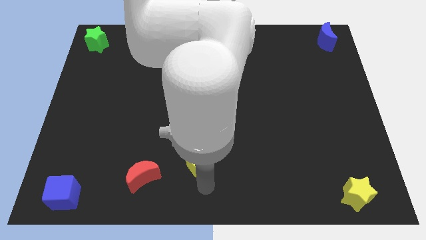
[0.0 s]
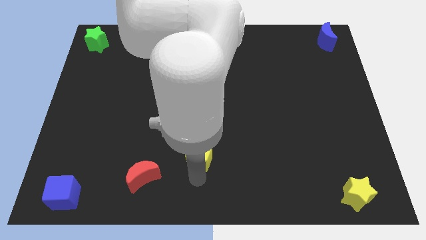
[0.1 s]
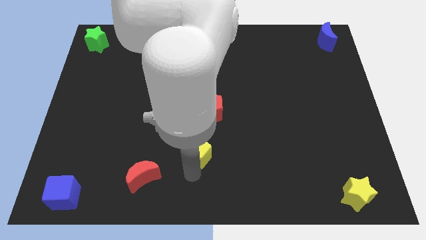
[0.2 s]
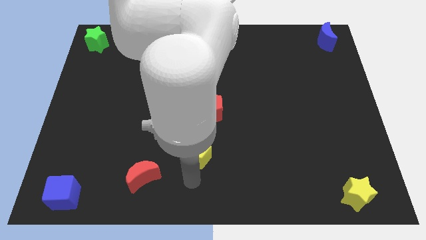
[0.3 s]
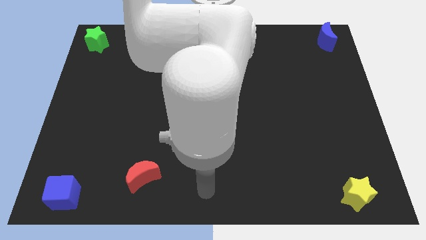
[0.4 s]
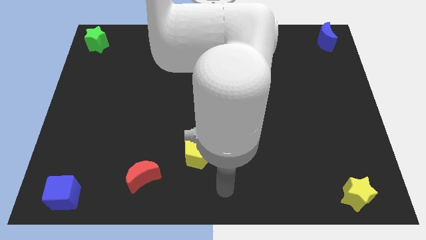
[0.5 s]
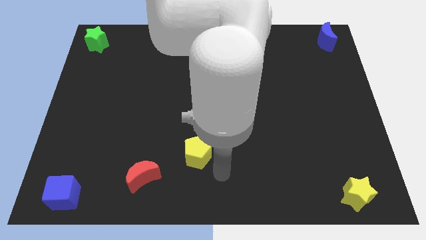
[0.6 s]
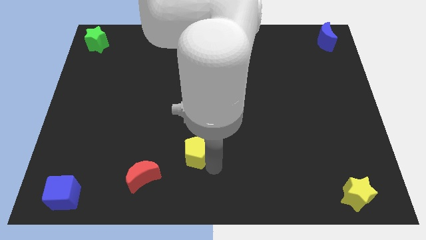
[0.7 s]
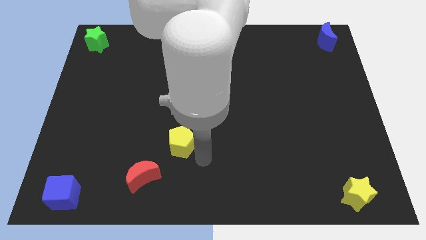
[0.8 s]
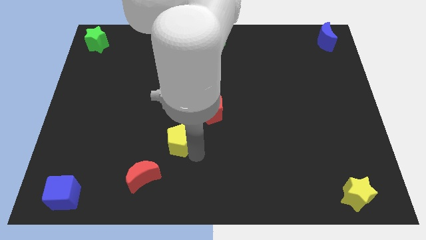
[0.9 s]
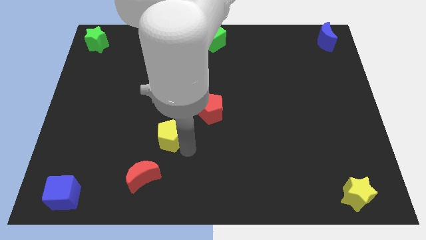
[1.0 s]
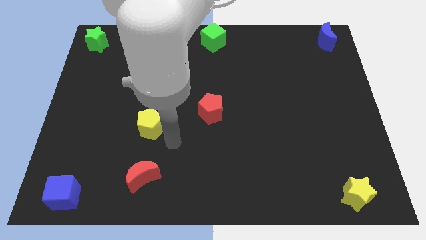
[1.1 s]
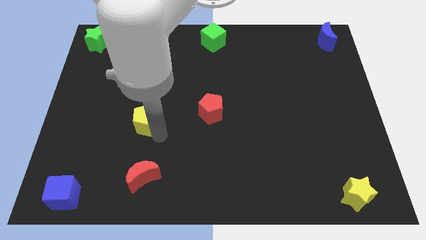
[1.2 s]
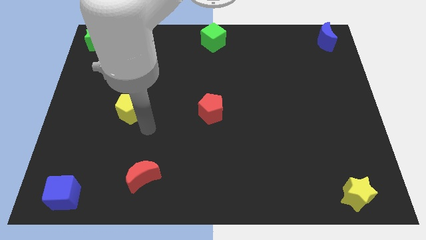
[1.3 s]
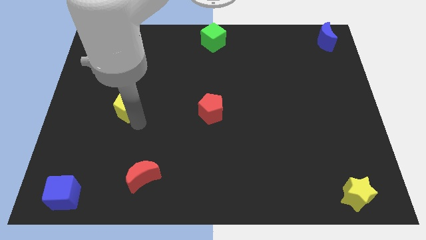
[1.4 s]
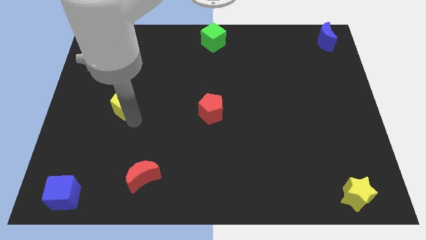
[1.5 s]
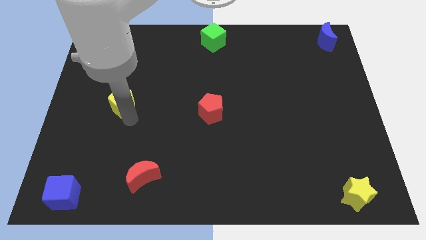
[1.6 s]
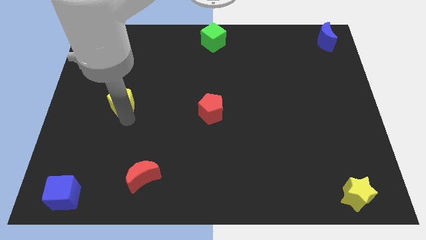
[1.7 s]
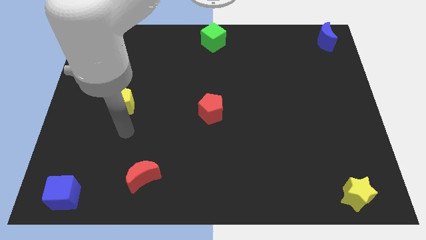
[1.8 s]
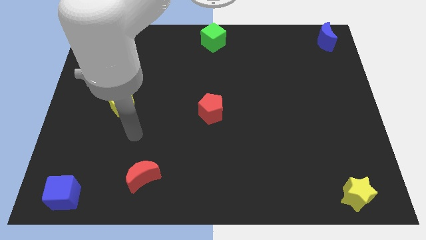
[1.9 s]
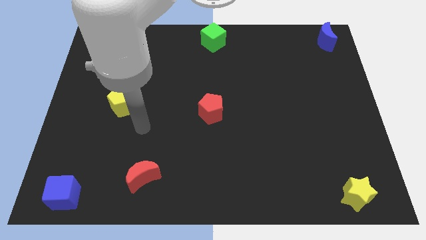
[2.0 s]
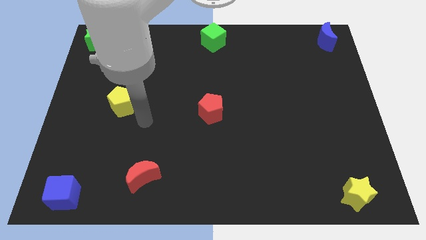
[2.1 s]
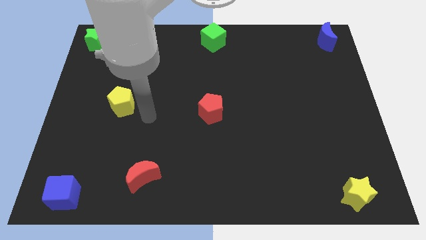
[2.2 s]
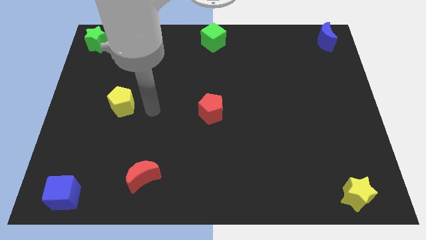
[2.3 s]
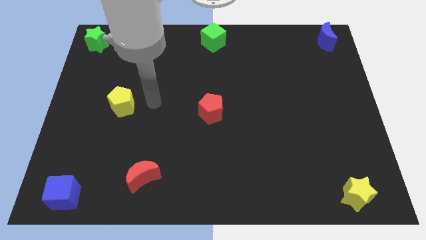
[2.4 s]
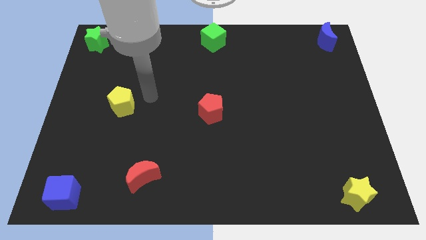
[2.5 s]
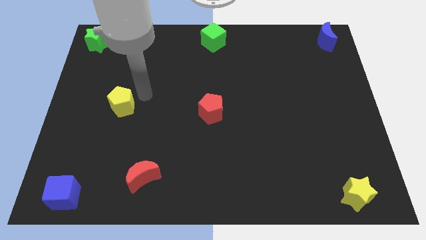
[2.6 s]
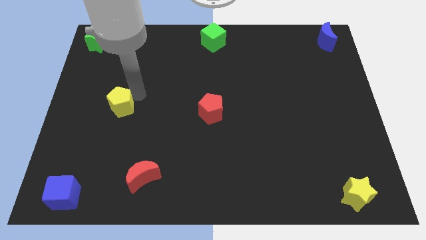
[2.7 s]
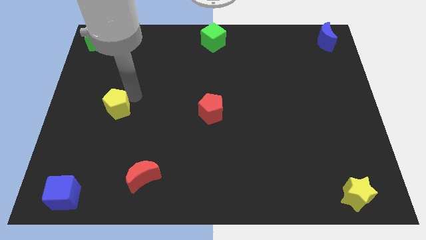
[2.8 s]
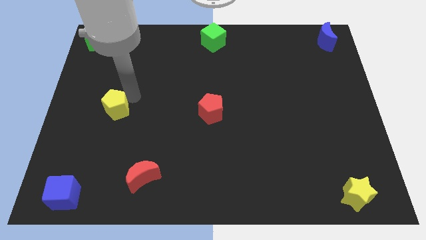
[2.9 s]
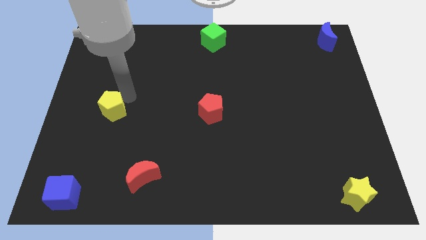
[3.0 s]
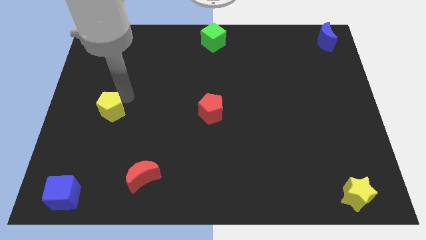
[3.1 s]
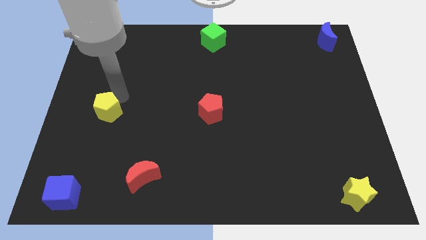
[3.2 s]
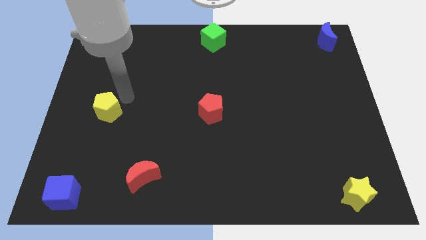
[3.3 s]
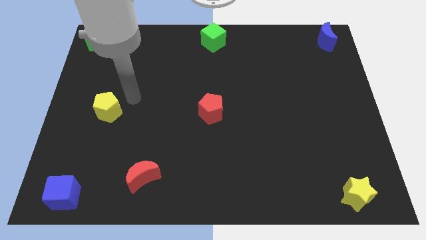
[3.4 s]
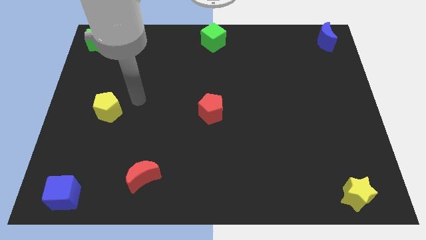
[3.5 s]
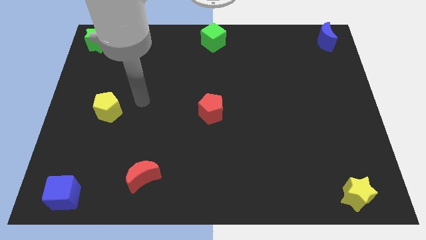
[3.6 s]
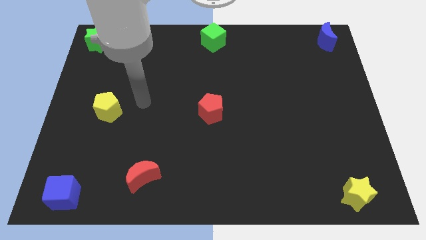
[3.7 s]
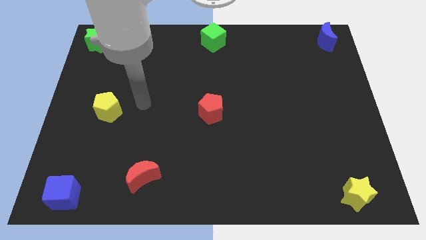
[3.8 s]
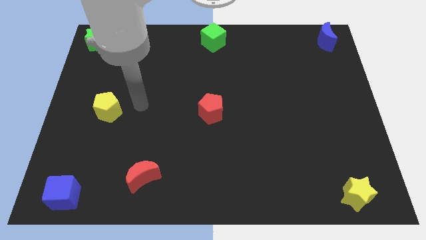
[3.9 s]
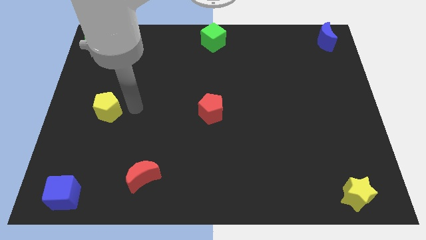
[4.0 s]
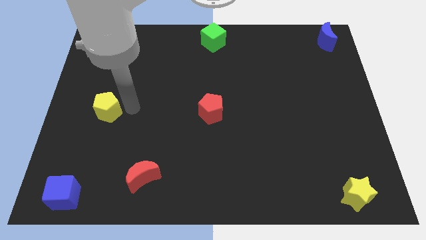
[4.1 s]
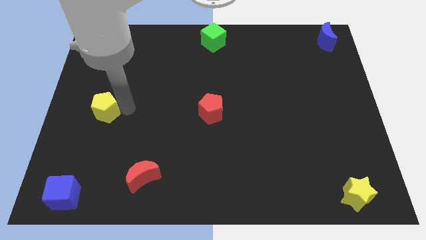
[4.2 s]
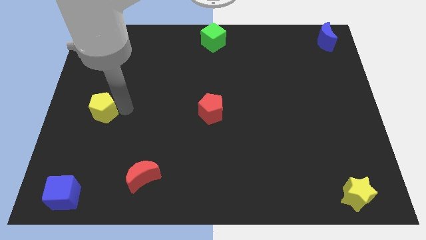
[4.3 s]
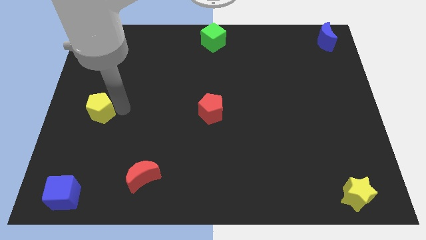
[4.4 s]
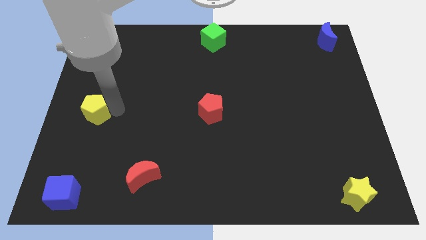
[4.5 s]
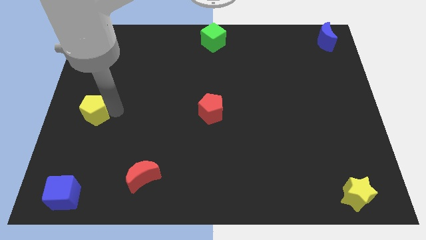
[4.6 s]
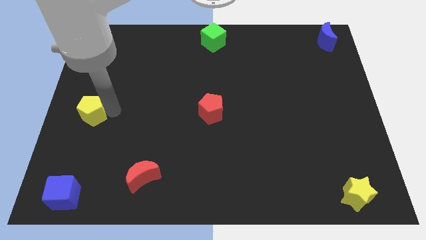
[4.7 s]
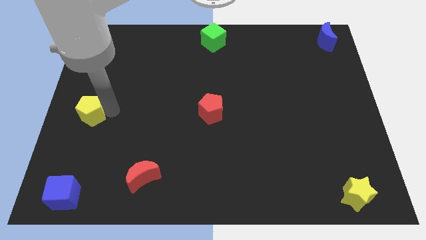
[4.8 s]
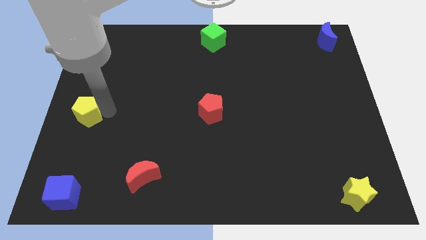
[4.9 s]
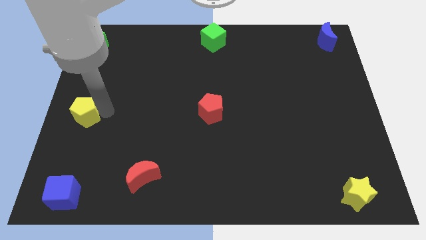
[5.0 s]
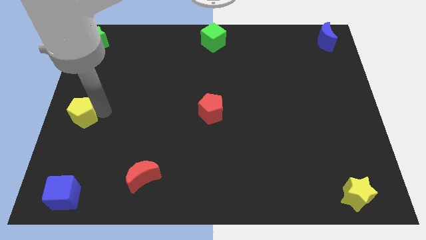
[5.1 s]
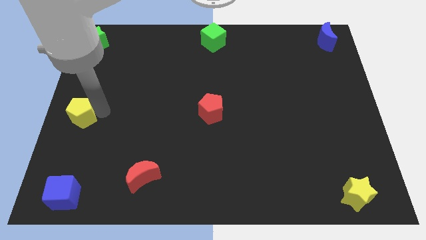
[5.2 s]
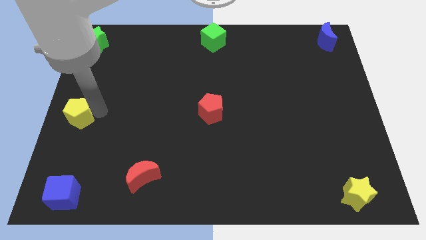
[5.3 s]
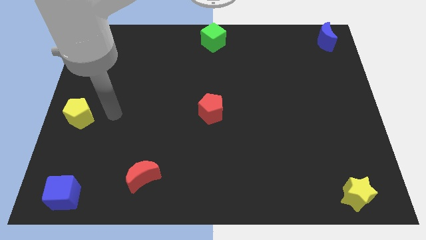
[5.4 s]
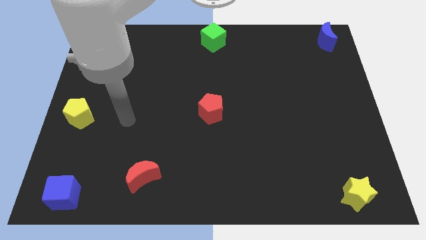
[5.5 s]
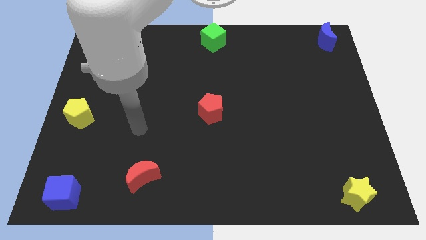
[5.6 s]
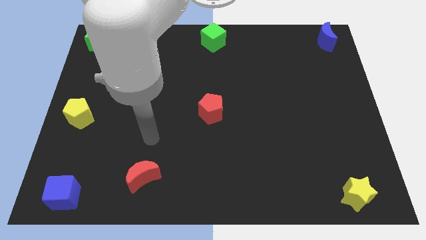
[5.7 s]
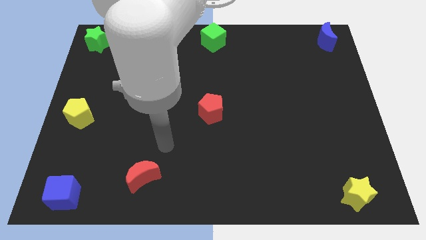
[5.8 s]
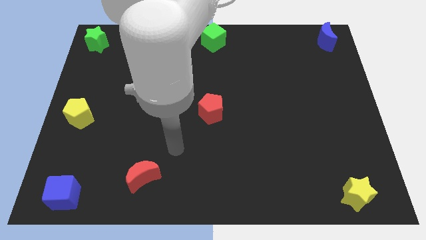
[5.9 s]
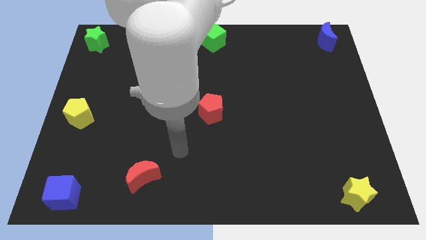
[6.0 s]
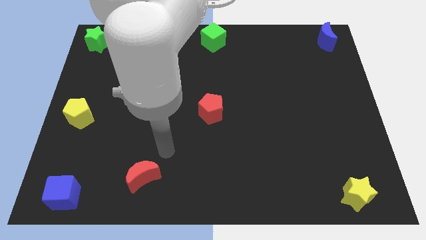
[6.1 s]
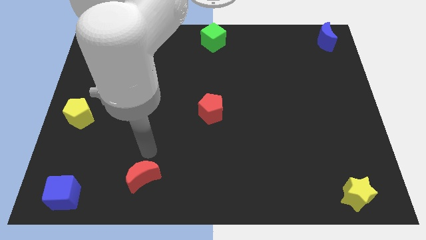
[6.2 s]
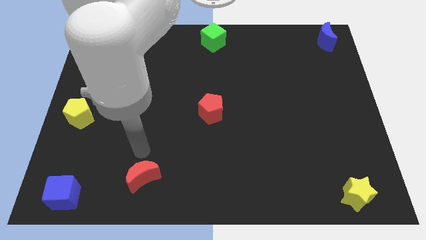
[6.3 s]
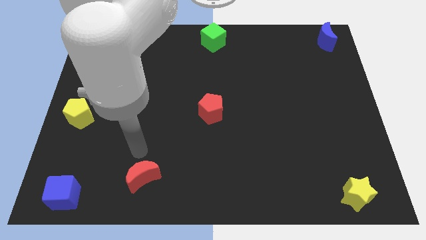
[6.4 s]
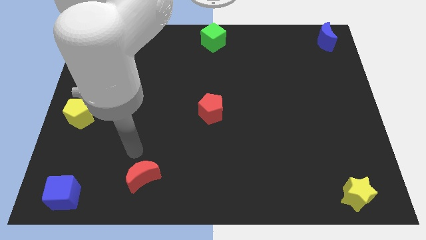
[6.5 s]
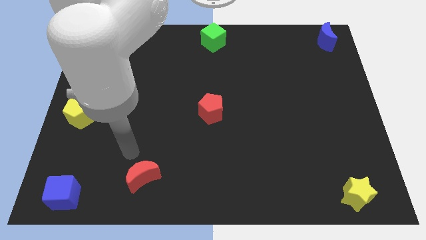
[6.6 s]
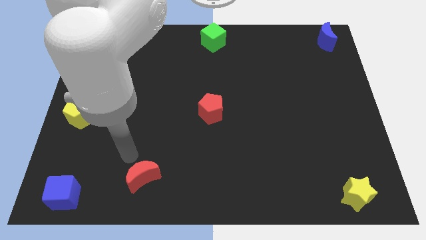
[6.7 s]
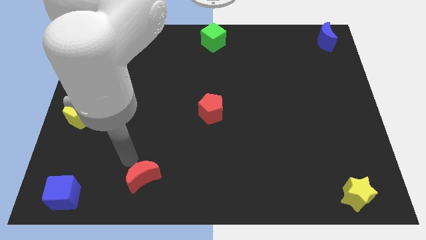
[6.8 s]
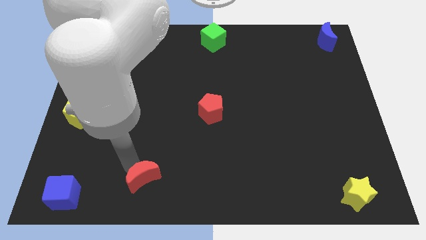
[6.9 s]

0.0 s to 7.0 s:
move the yellow pentagon to the left corner of the board to the middle

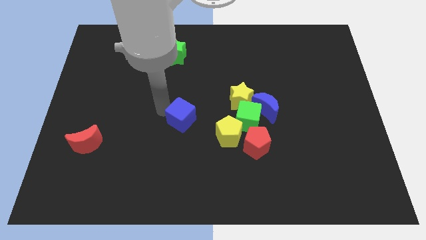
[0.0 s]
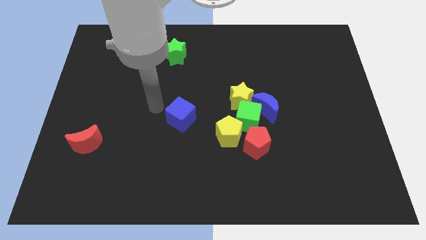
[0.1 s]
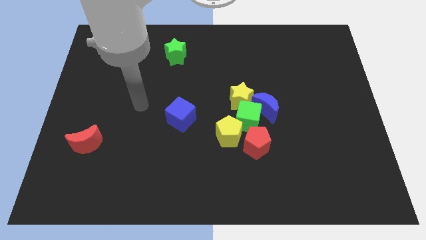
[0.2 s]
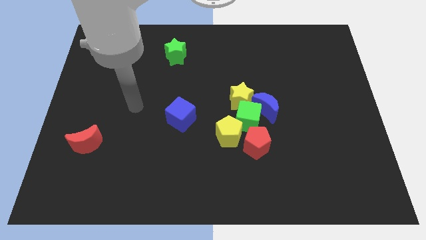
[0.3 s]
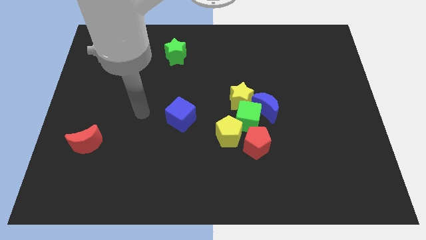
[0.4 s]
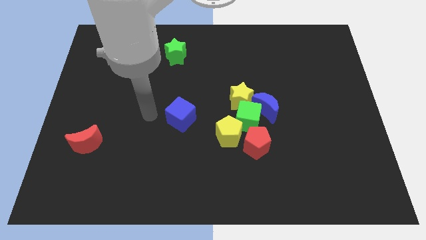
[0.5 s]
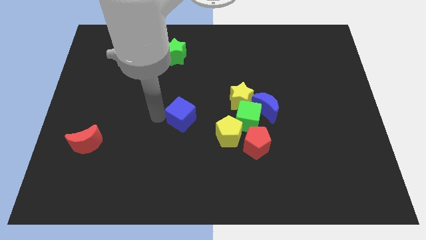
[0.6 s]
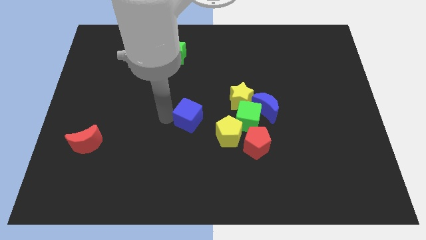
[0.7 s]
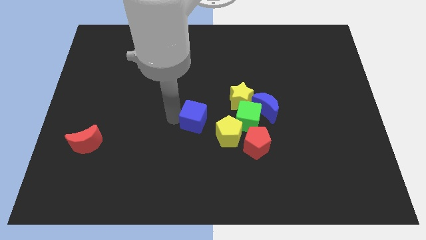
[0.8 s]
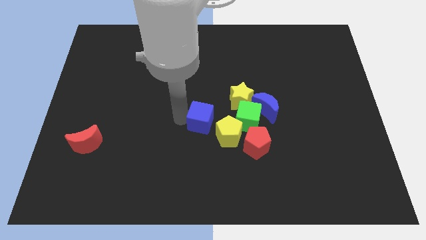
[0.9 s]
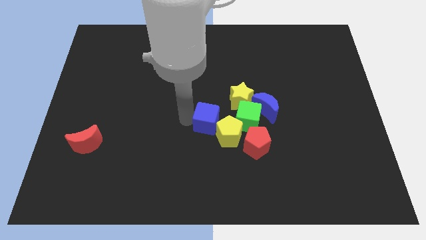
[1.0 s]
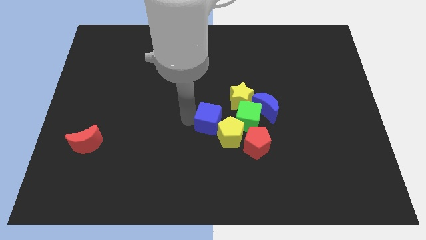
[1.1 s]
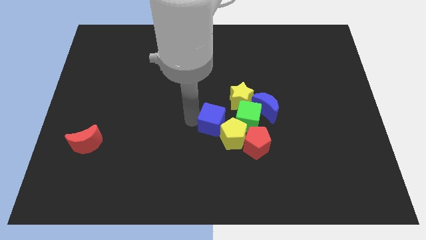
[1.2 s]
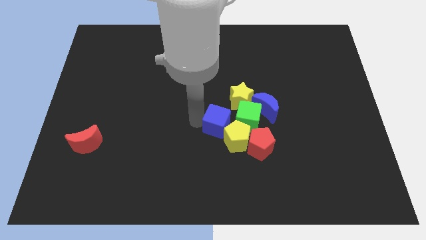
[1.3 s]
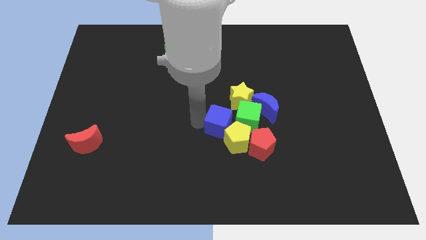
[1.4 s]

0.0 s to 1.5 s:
push the blue cube into the yellow pentagon

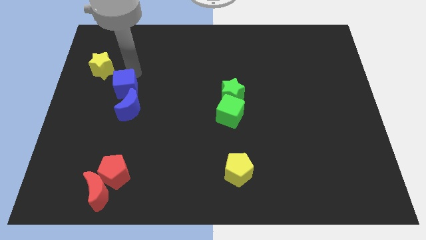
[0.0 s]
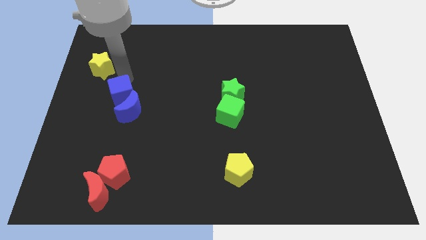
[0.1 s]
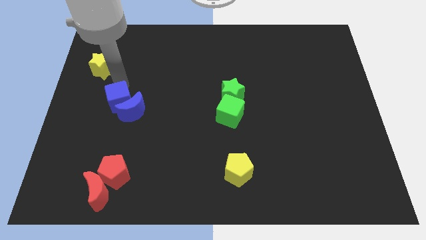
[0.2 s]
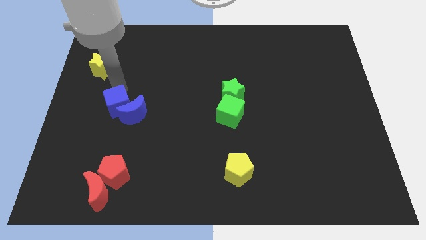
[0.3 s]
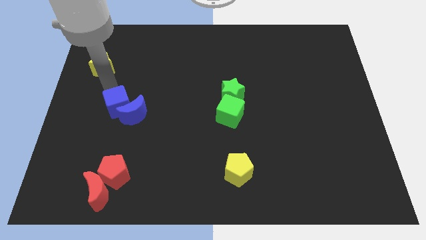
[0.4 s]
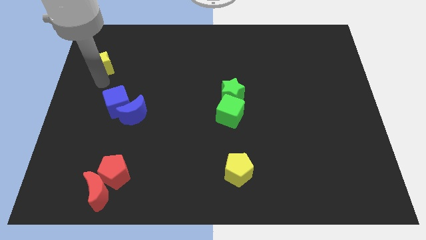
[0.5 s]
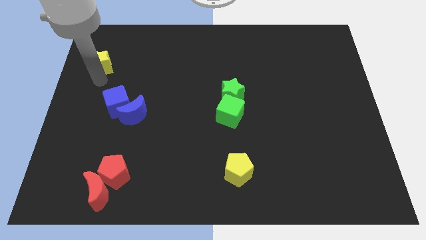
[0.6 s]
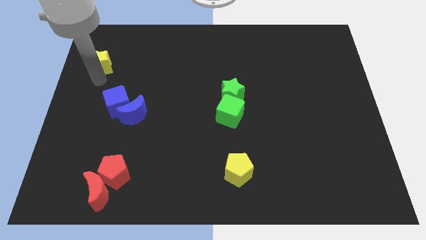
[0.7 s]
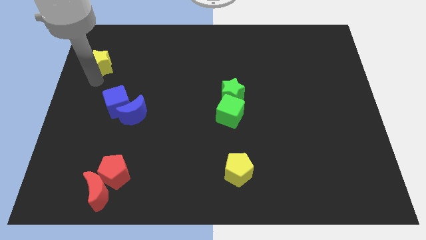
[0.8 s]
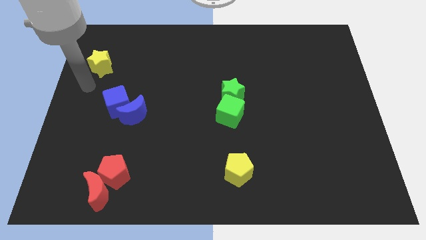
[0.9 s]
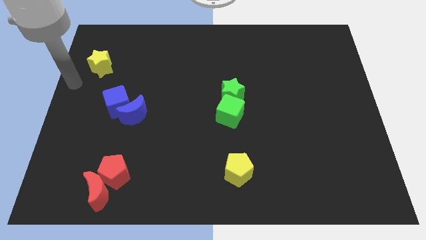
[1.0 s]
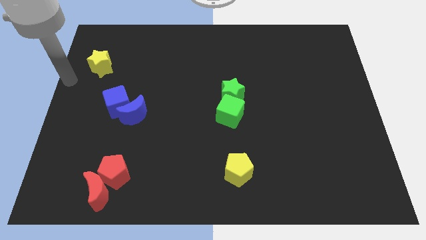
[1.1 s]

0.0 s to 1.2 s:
push the blue cube into blue crescent
